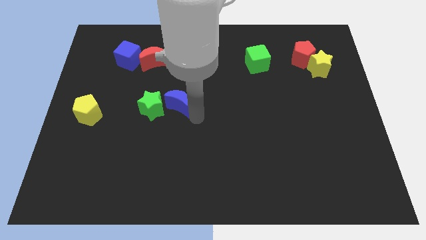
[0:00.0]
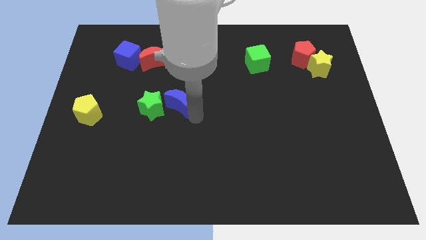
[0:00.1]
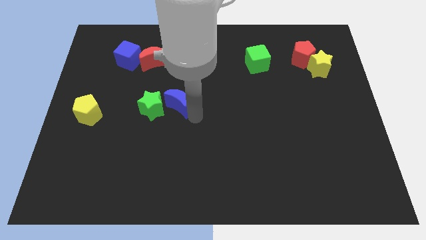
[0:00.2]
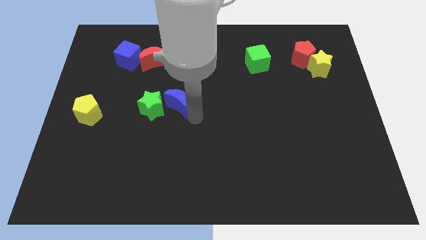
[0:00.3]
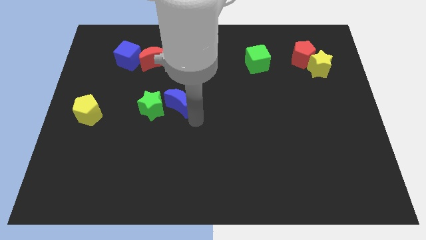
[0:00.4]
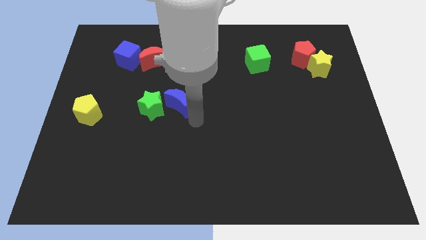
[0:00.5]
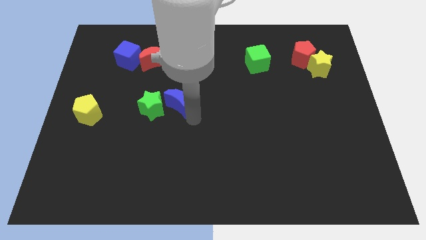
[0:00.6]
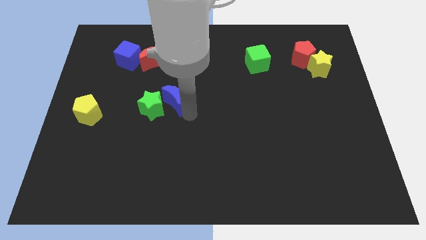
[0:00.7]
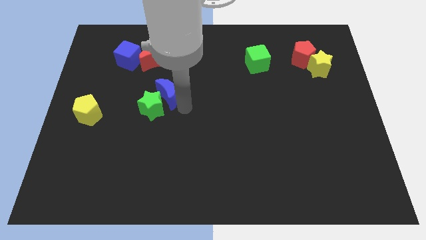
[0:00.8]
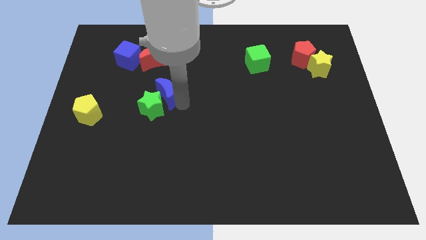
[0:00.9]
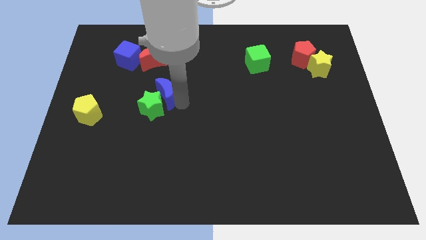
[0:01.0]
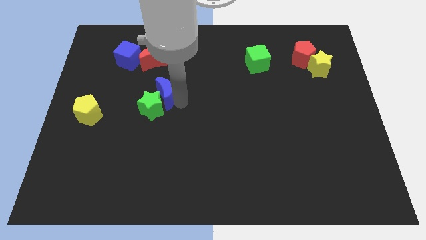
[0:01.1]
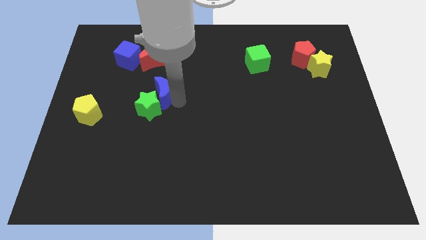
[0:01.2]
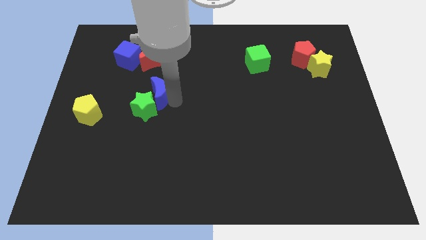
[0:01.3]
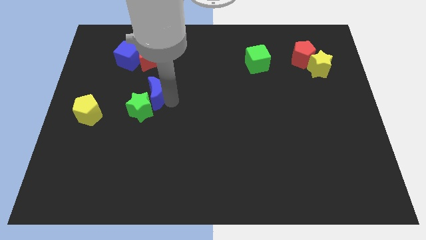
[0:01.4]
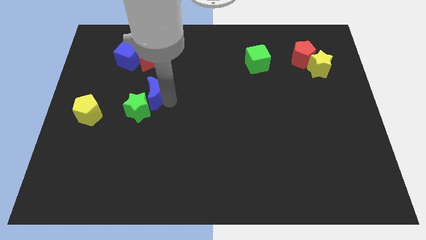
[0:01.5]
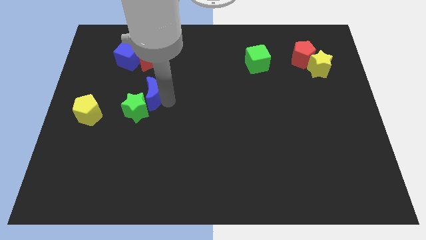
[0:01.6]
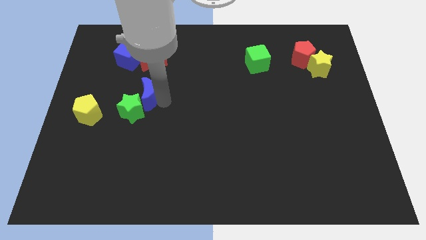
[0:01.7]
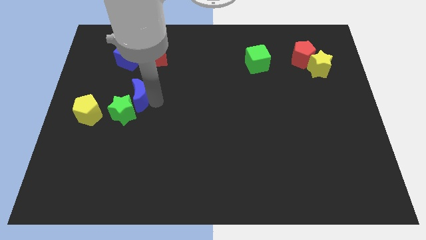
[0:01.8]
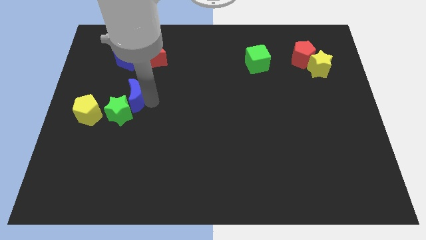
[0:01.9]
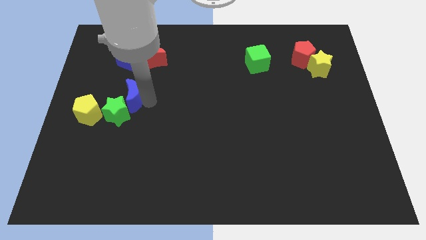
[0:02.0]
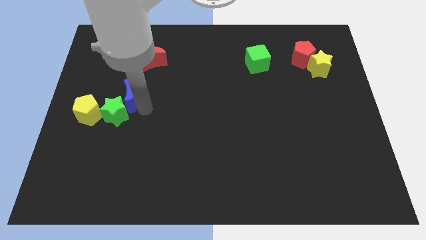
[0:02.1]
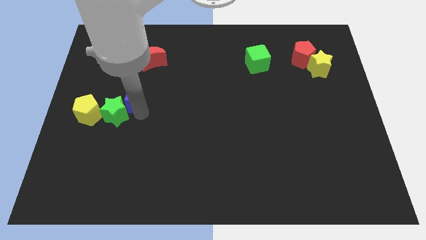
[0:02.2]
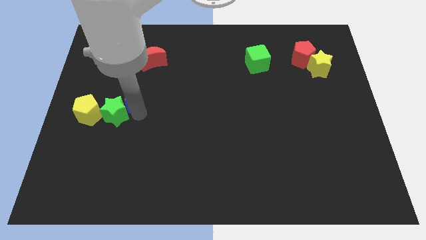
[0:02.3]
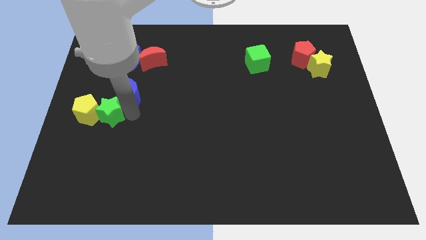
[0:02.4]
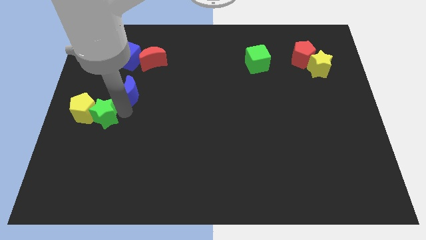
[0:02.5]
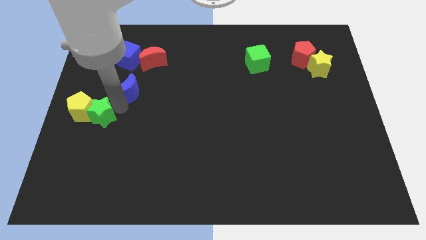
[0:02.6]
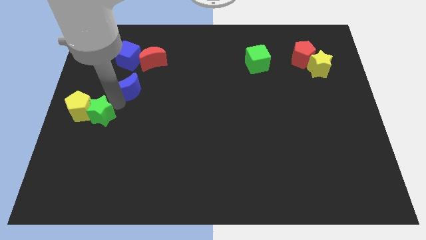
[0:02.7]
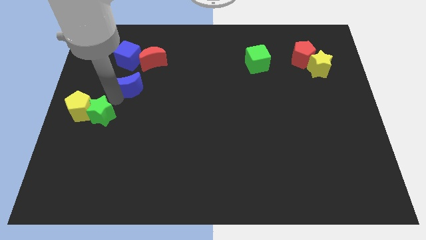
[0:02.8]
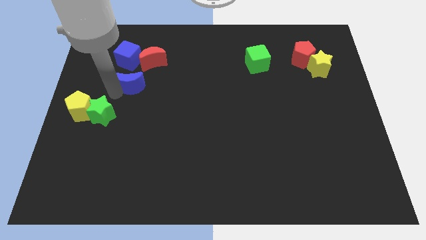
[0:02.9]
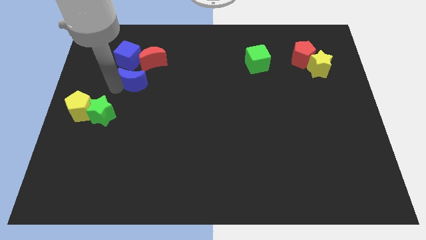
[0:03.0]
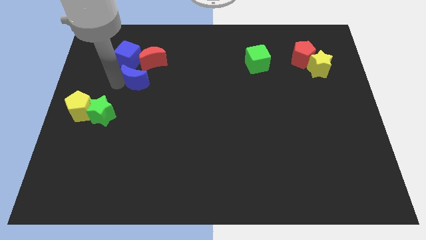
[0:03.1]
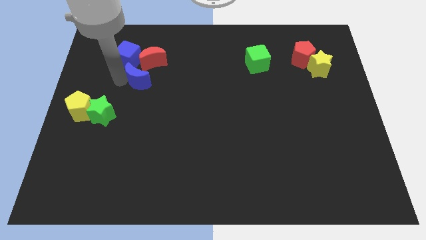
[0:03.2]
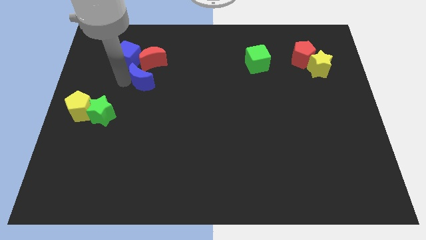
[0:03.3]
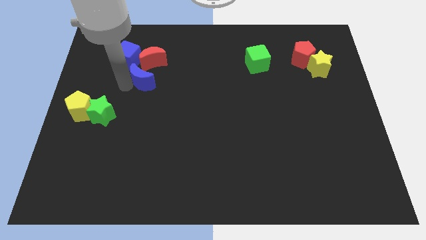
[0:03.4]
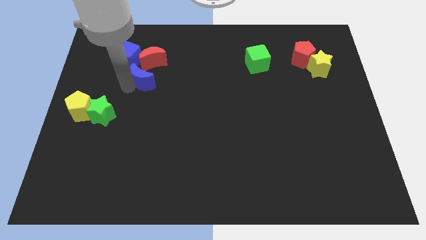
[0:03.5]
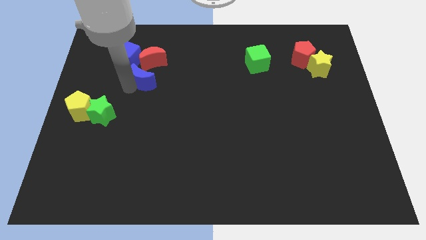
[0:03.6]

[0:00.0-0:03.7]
place blue moon at the bottom of red crescent

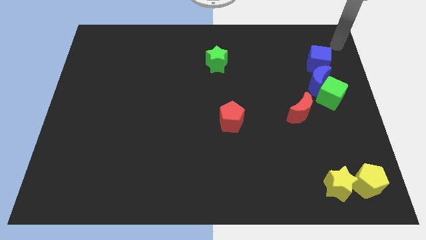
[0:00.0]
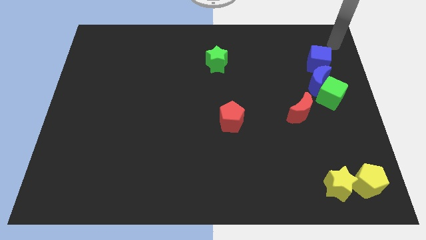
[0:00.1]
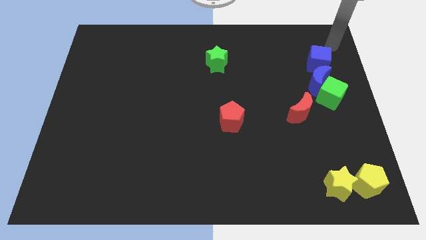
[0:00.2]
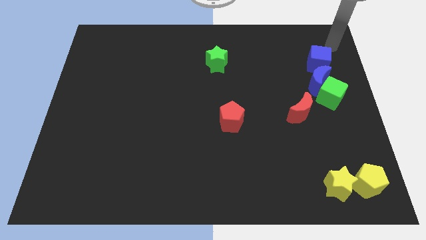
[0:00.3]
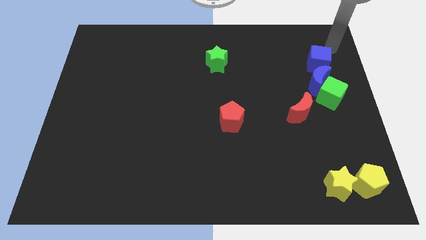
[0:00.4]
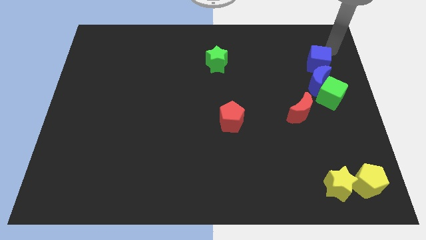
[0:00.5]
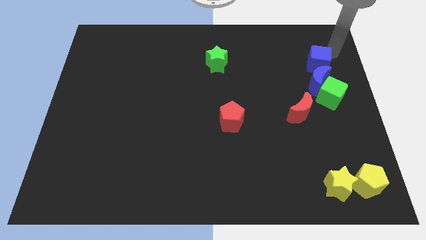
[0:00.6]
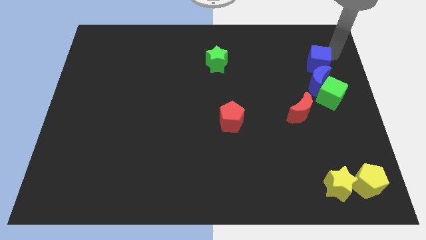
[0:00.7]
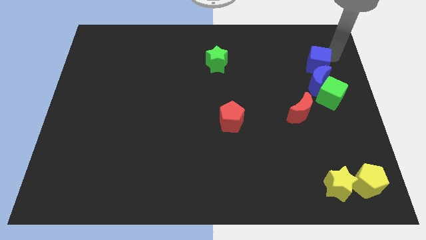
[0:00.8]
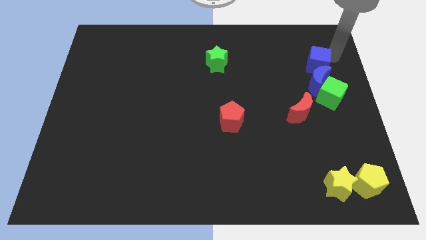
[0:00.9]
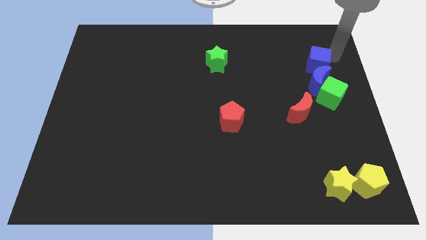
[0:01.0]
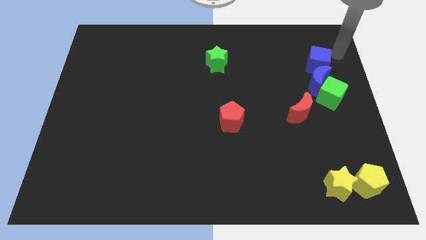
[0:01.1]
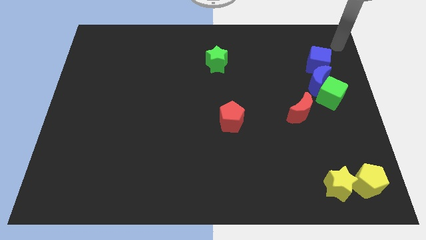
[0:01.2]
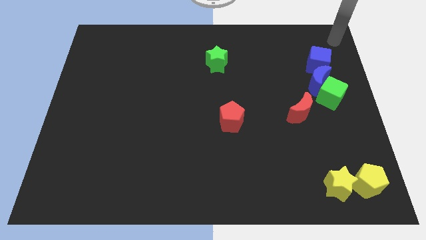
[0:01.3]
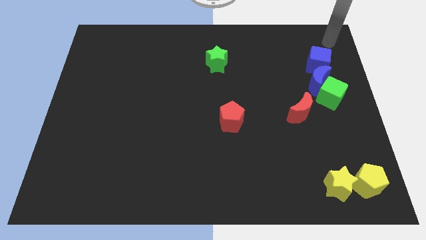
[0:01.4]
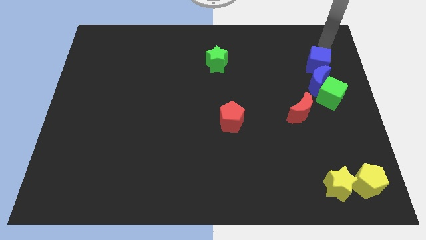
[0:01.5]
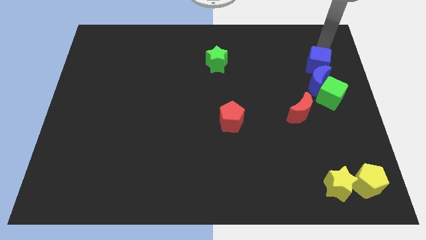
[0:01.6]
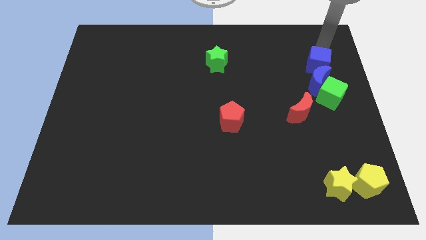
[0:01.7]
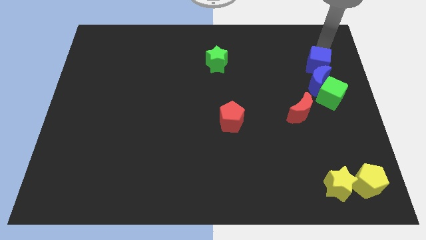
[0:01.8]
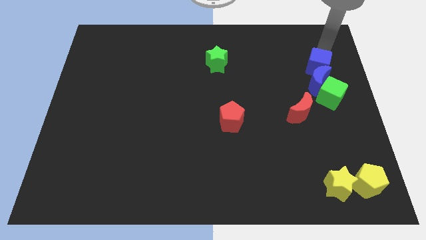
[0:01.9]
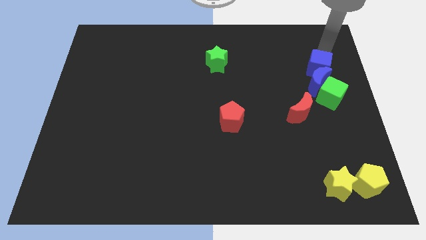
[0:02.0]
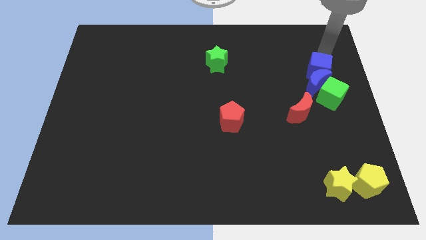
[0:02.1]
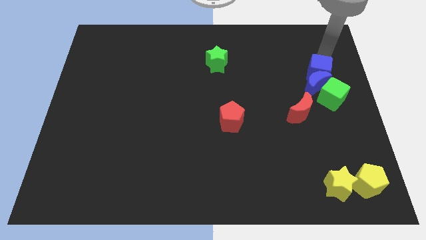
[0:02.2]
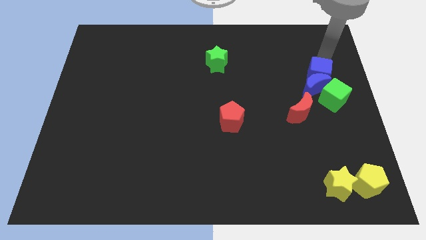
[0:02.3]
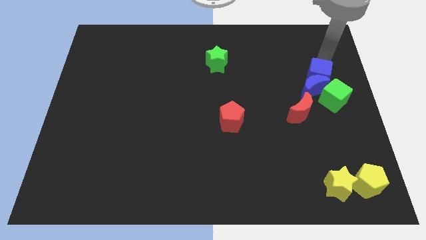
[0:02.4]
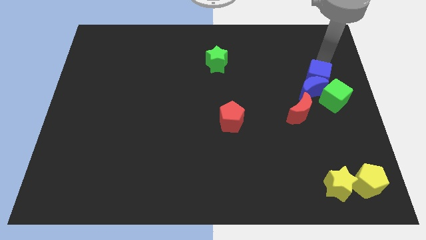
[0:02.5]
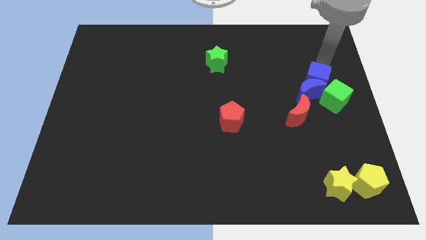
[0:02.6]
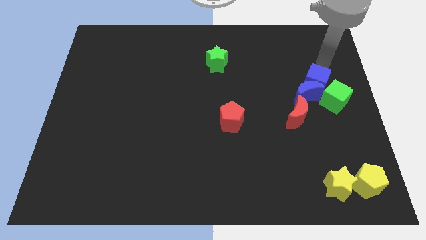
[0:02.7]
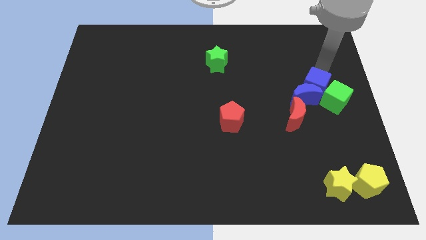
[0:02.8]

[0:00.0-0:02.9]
push the blue cube into the blue crescent

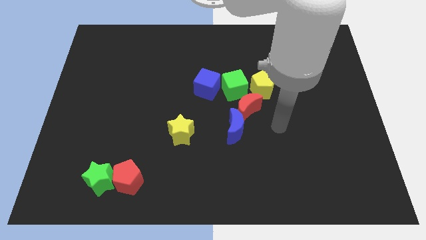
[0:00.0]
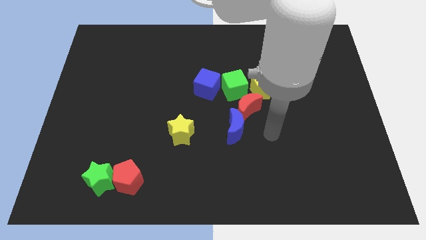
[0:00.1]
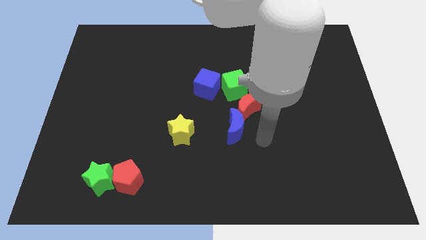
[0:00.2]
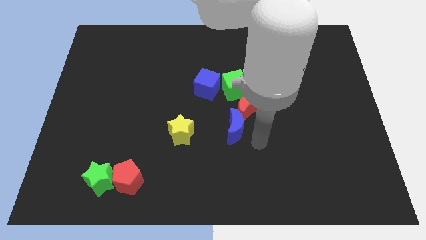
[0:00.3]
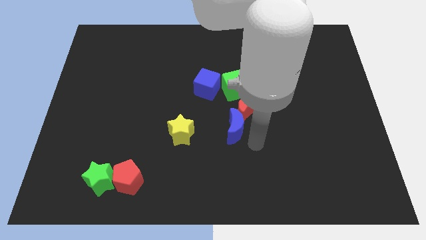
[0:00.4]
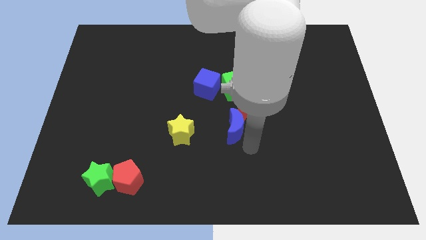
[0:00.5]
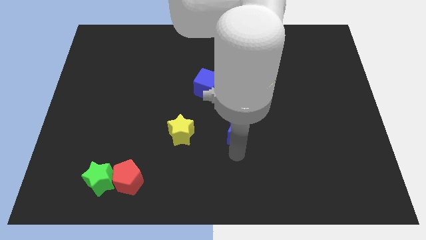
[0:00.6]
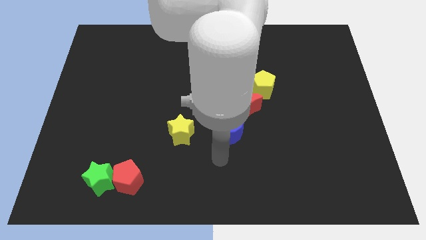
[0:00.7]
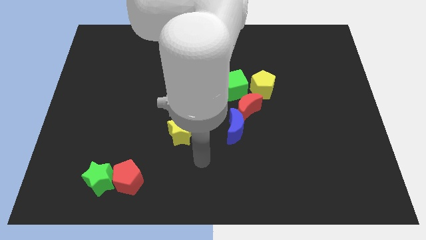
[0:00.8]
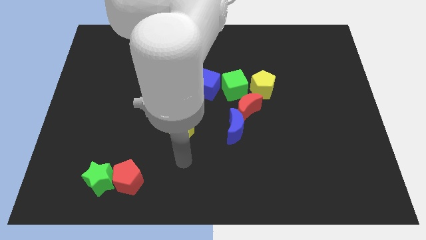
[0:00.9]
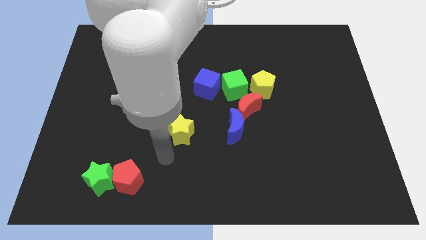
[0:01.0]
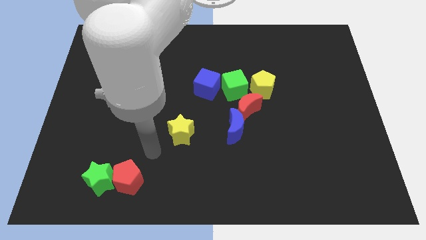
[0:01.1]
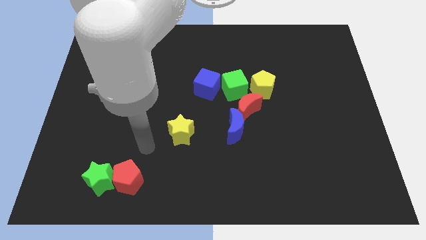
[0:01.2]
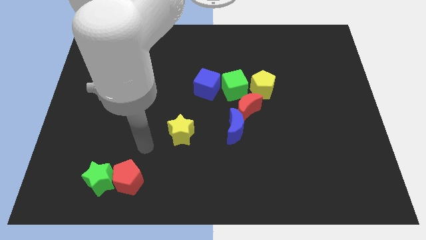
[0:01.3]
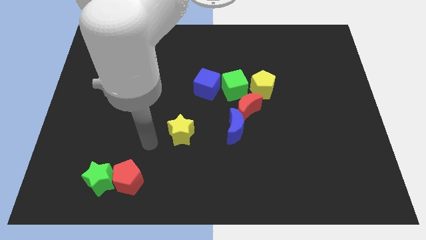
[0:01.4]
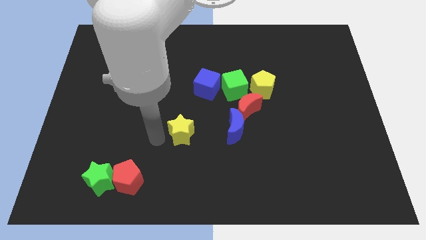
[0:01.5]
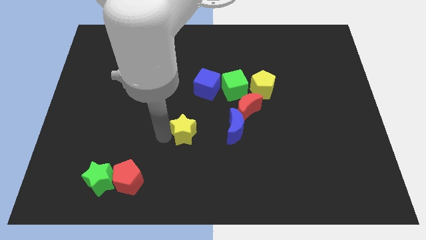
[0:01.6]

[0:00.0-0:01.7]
tap the yellow star

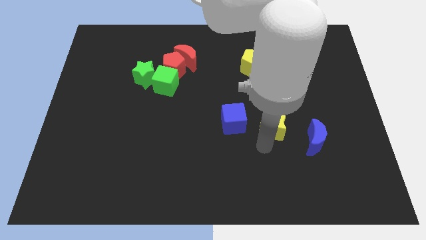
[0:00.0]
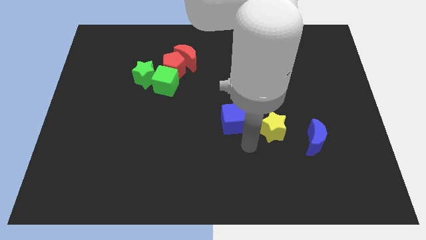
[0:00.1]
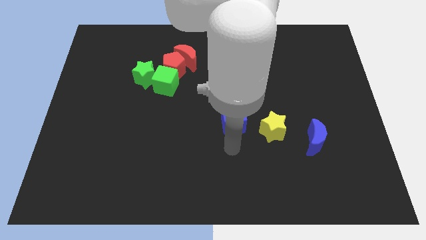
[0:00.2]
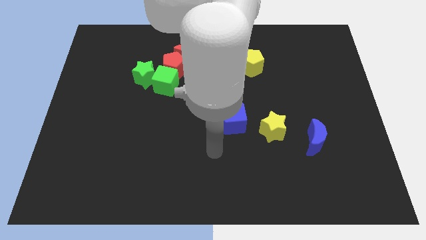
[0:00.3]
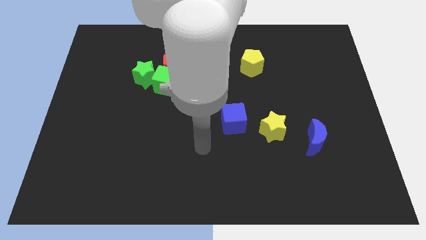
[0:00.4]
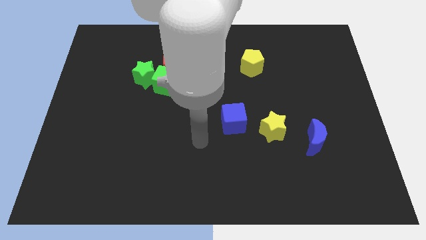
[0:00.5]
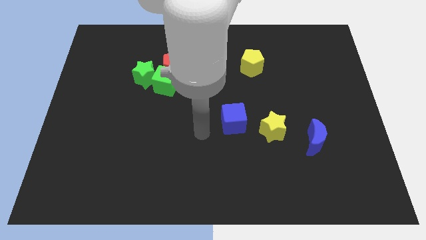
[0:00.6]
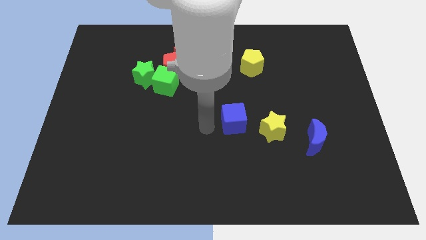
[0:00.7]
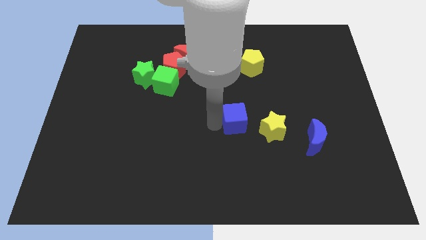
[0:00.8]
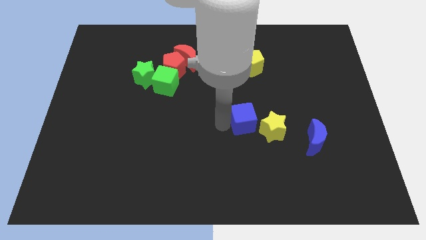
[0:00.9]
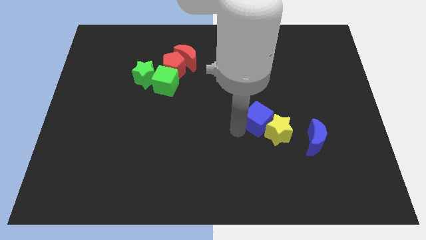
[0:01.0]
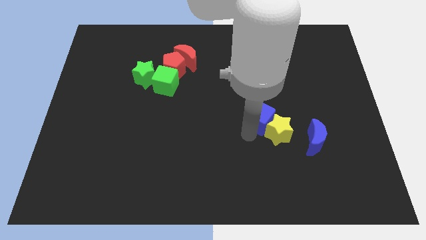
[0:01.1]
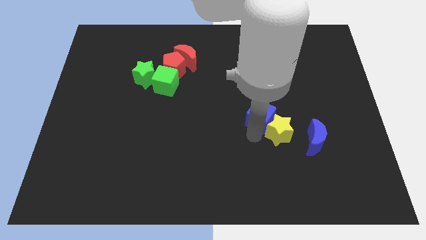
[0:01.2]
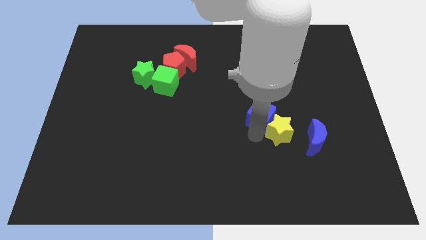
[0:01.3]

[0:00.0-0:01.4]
move the blue cube into the yellow star
